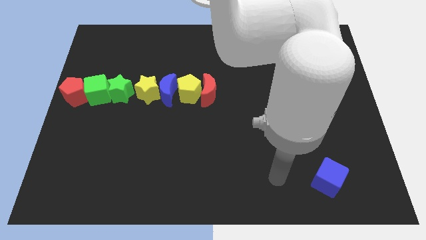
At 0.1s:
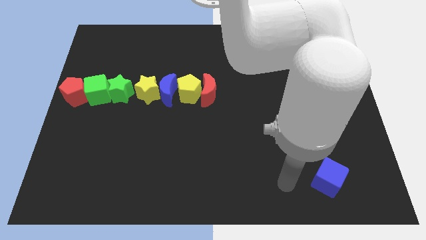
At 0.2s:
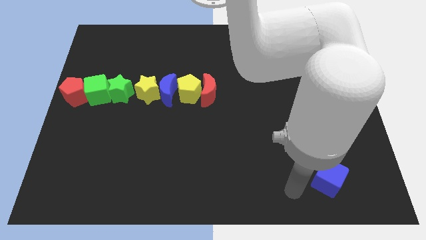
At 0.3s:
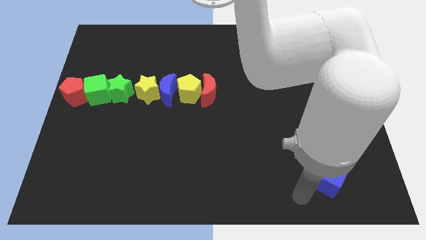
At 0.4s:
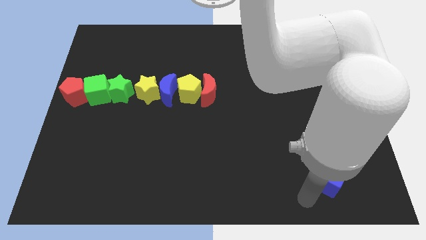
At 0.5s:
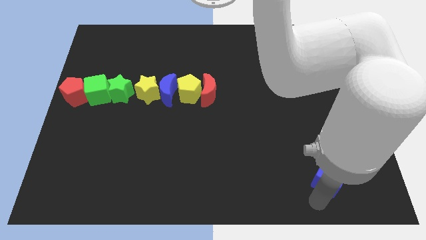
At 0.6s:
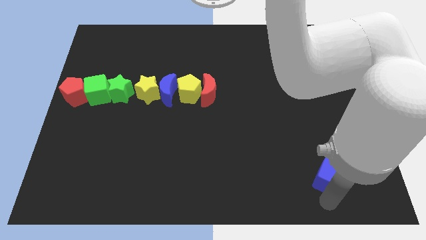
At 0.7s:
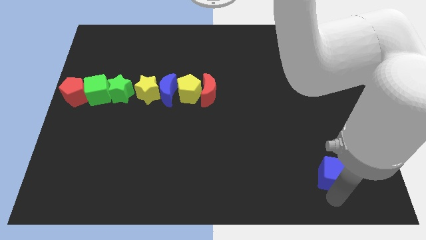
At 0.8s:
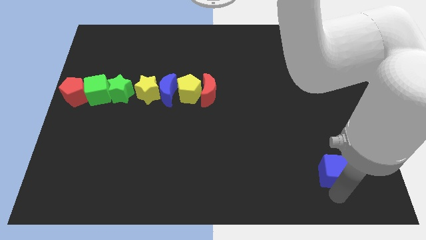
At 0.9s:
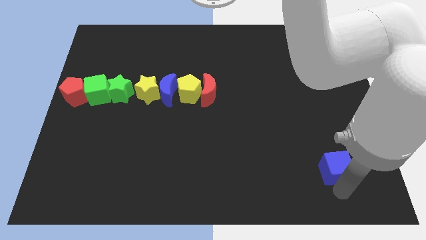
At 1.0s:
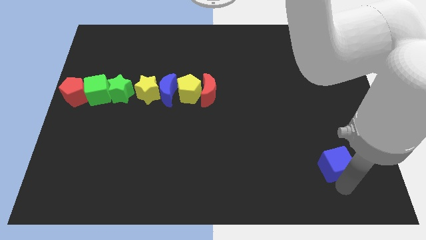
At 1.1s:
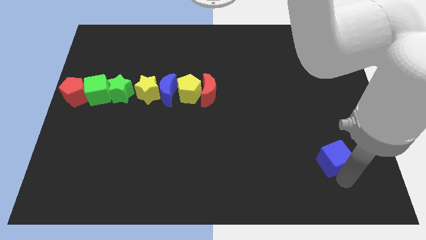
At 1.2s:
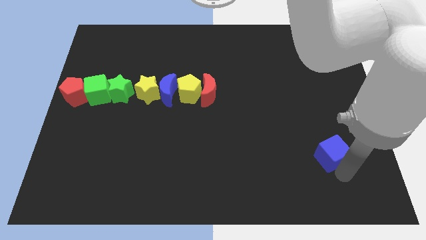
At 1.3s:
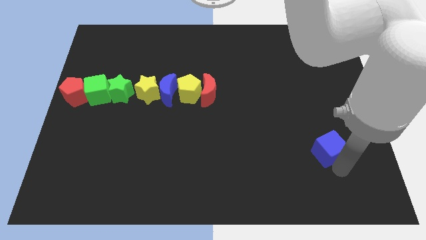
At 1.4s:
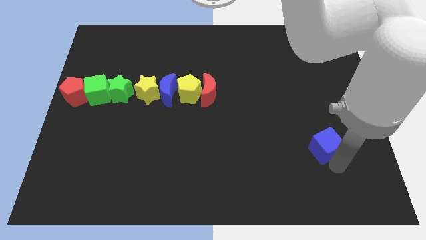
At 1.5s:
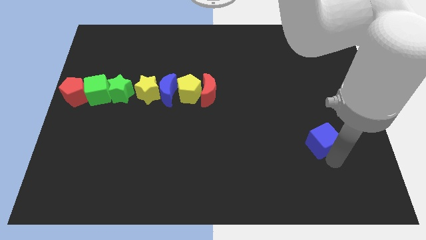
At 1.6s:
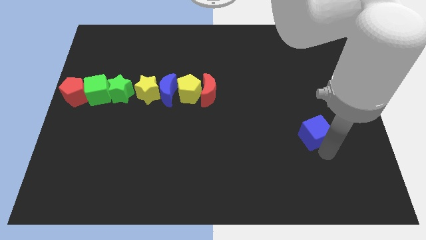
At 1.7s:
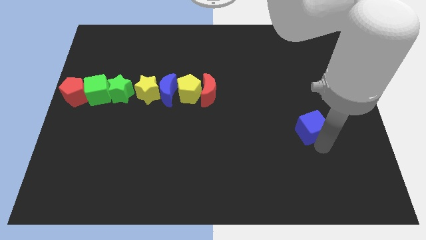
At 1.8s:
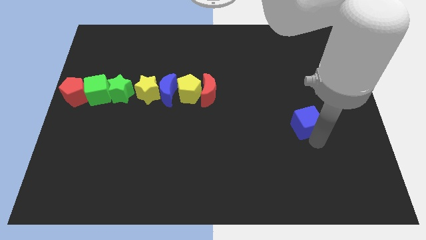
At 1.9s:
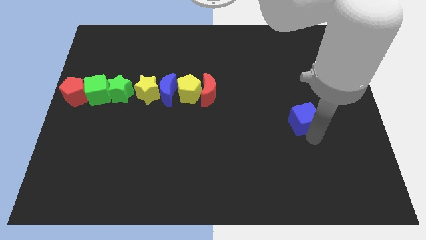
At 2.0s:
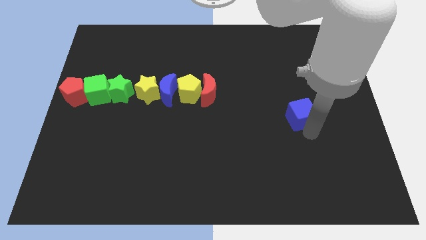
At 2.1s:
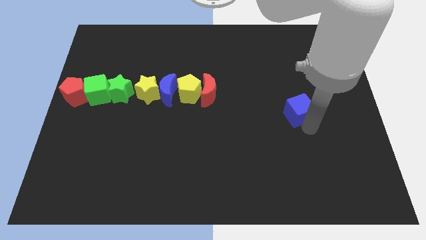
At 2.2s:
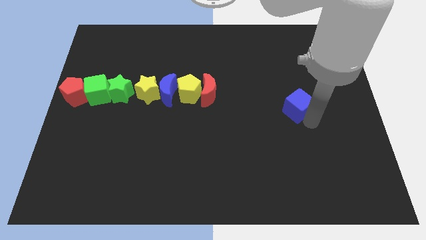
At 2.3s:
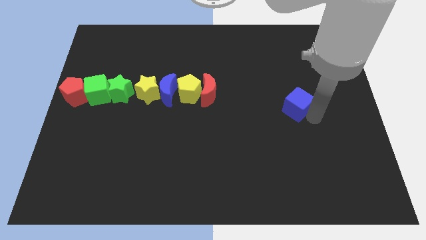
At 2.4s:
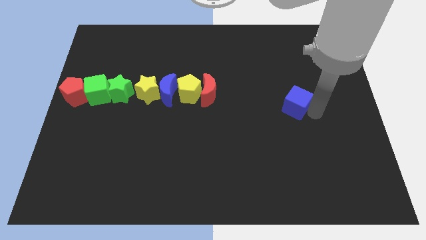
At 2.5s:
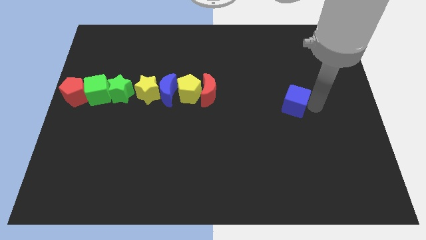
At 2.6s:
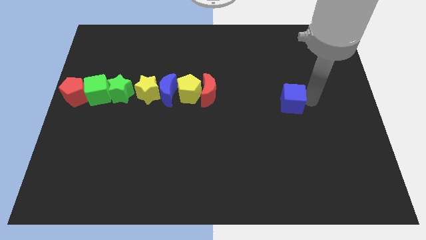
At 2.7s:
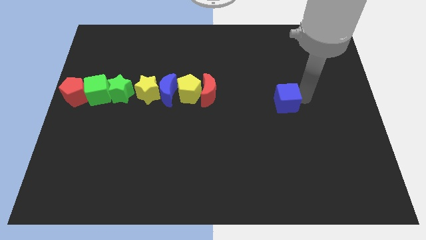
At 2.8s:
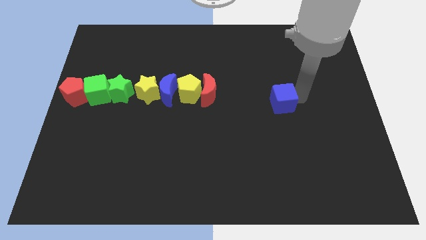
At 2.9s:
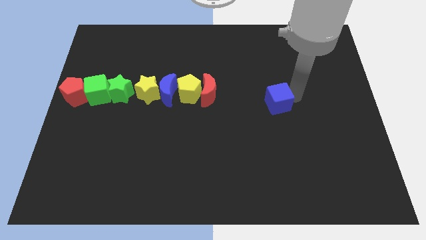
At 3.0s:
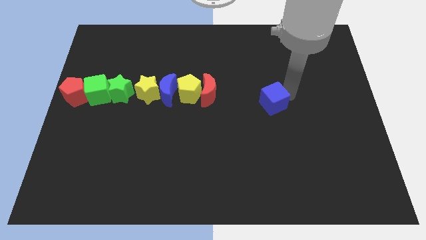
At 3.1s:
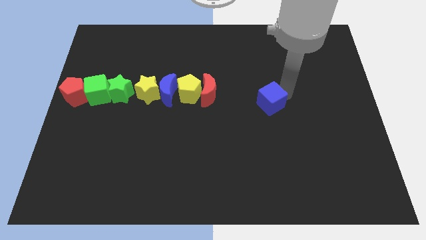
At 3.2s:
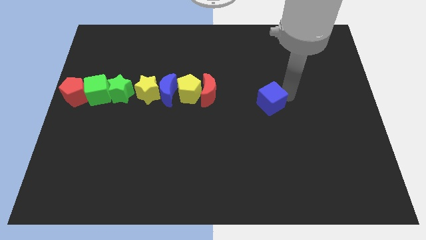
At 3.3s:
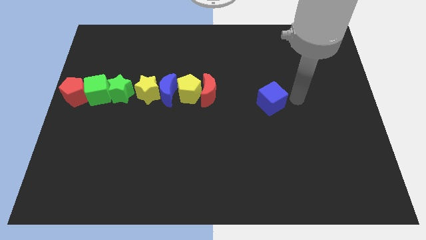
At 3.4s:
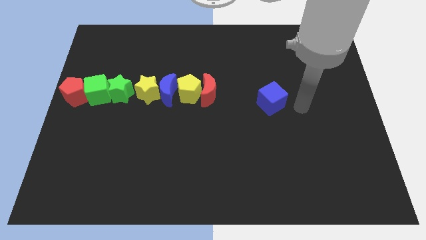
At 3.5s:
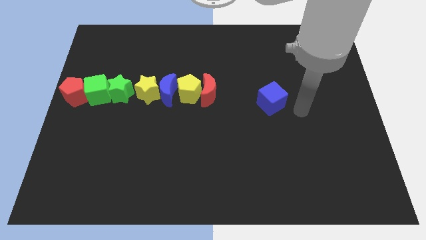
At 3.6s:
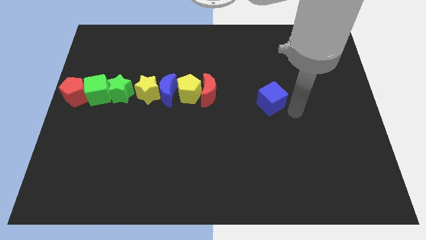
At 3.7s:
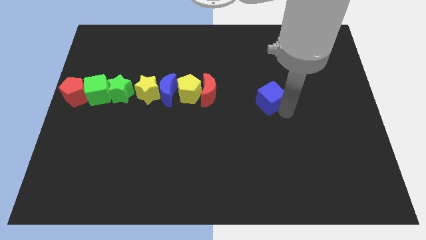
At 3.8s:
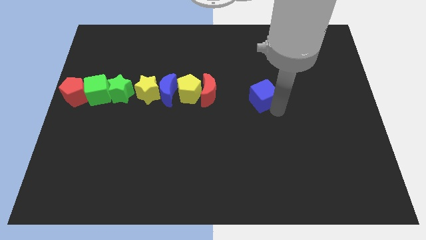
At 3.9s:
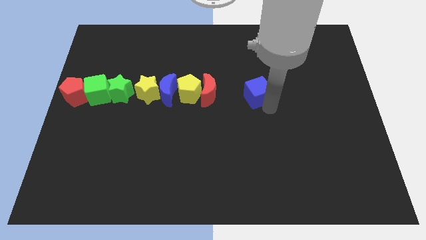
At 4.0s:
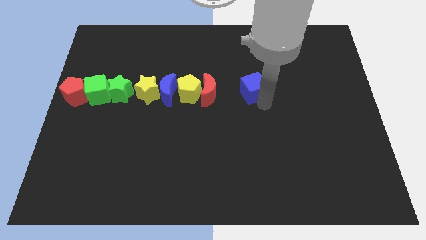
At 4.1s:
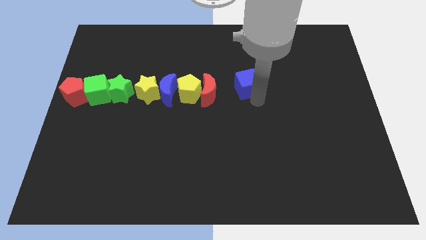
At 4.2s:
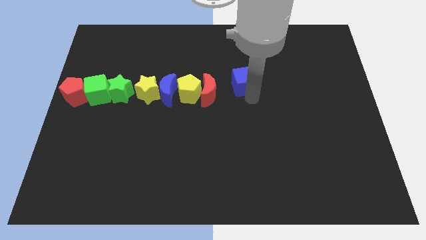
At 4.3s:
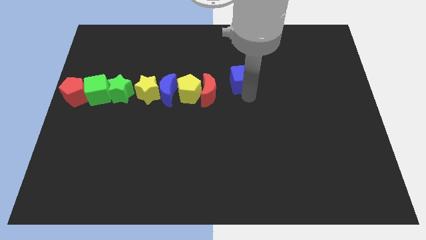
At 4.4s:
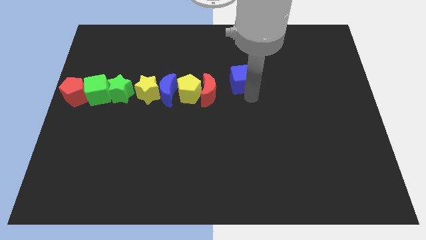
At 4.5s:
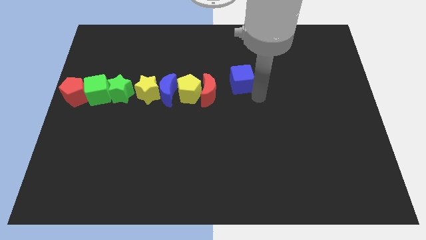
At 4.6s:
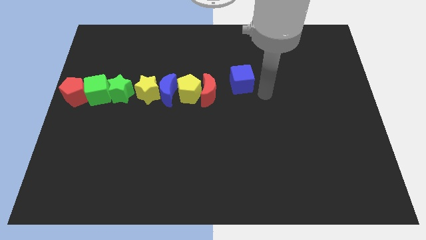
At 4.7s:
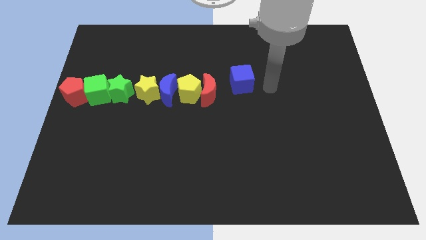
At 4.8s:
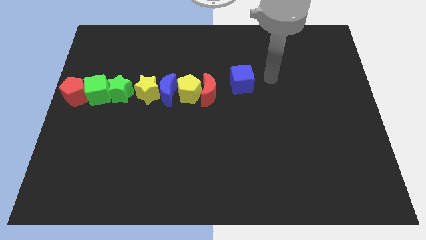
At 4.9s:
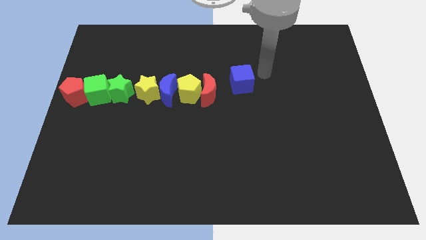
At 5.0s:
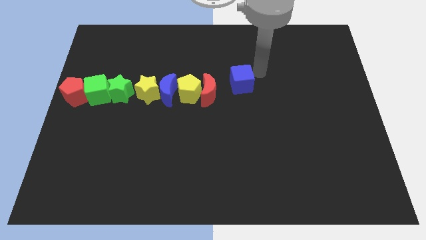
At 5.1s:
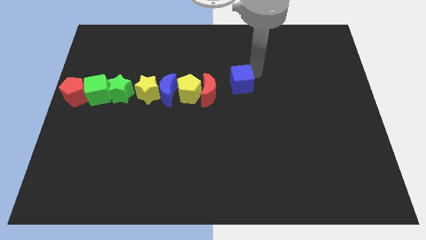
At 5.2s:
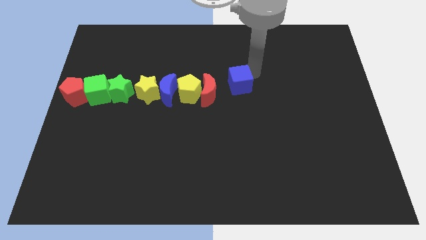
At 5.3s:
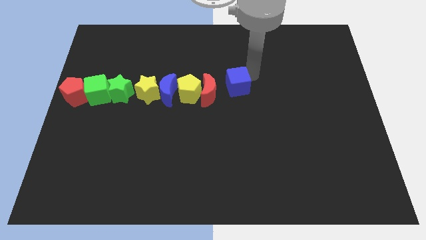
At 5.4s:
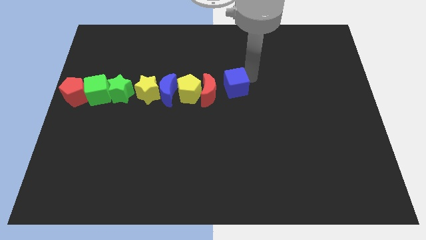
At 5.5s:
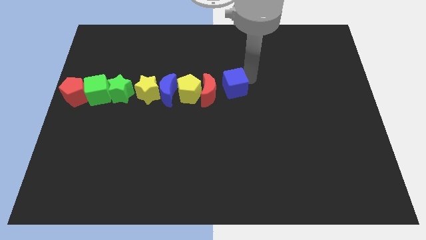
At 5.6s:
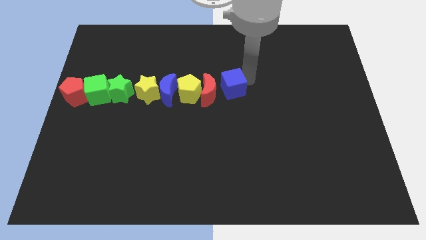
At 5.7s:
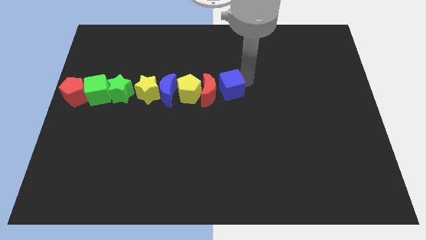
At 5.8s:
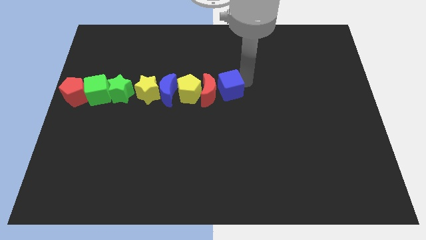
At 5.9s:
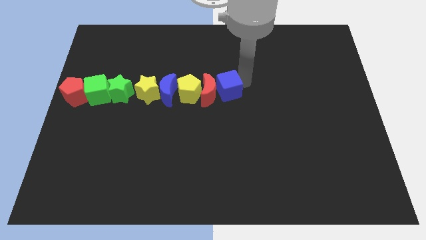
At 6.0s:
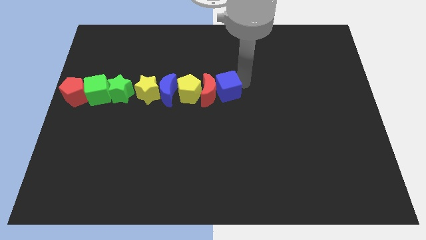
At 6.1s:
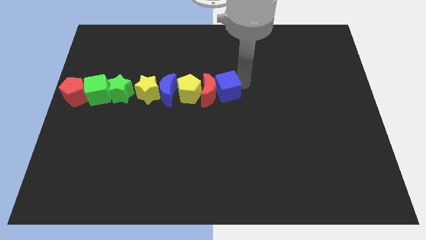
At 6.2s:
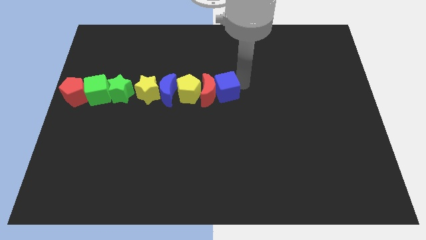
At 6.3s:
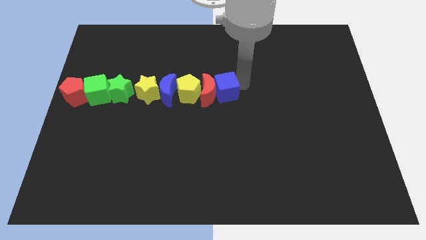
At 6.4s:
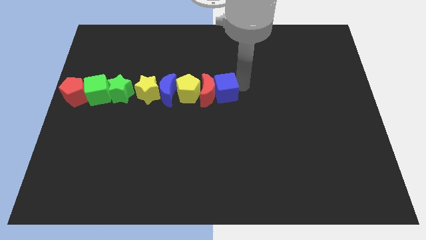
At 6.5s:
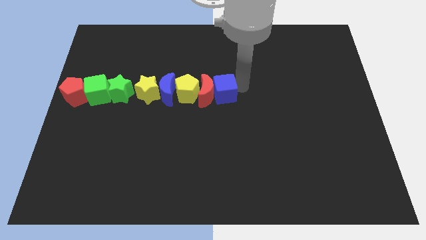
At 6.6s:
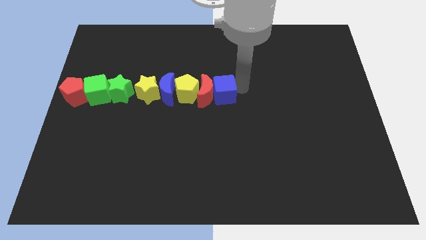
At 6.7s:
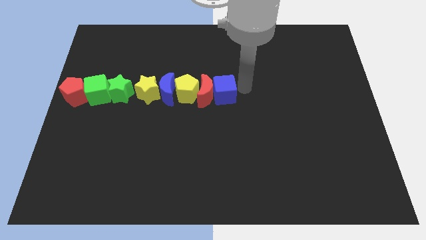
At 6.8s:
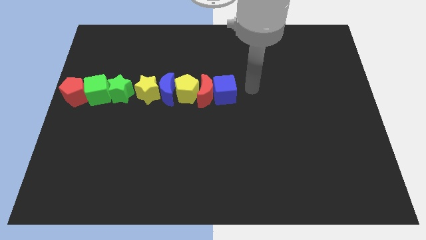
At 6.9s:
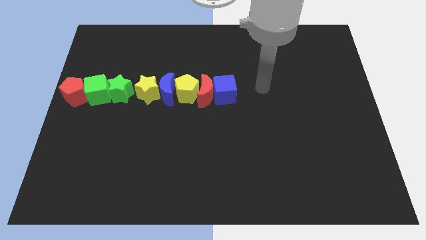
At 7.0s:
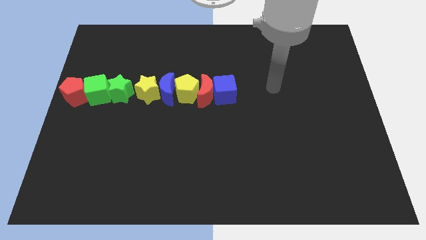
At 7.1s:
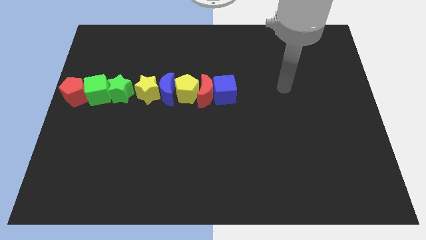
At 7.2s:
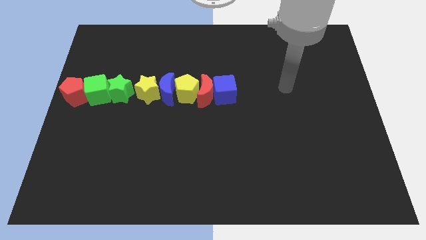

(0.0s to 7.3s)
move the blue cube to the right side of the red crescent

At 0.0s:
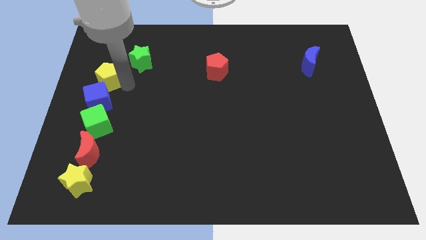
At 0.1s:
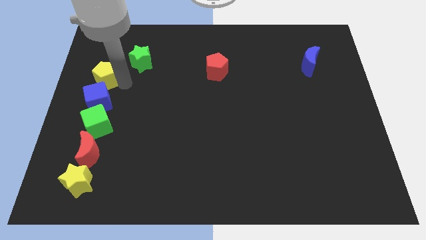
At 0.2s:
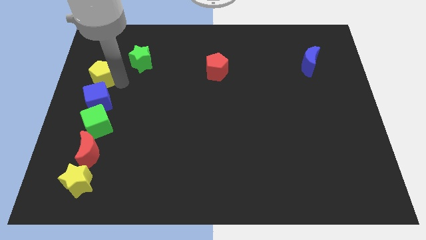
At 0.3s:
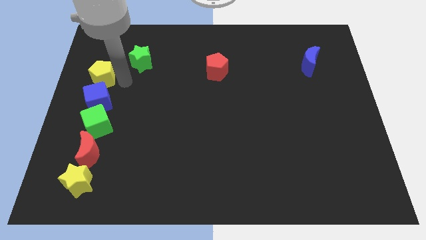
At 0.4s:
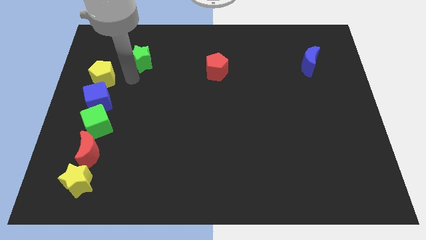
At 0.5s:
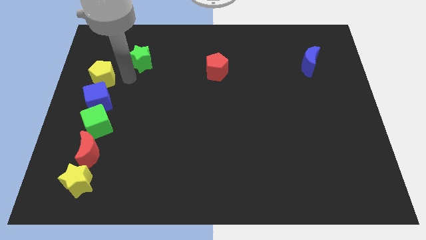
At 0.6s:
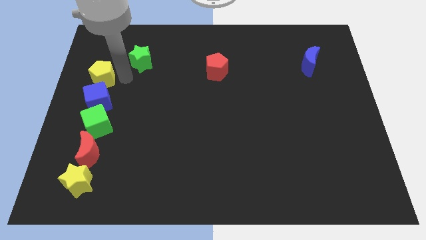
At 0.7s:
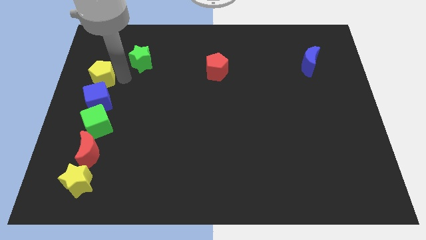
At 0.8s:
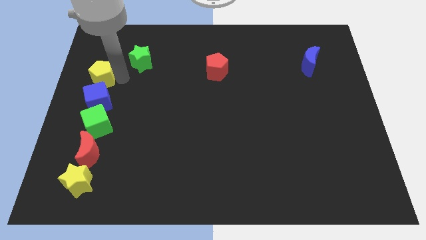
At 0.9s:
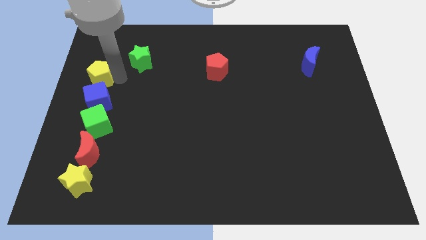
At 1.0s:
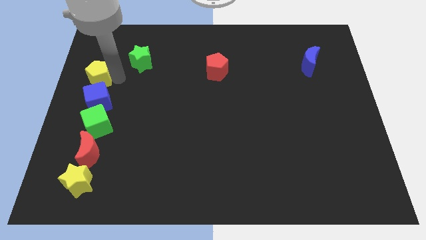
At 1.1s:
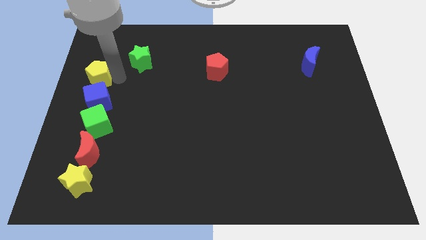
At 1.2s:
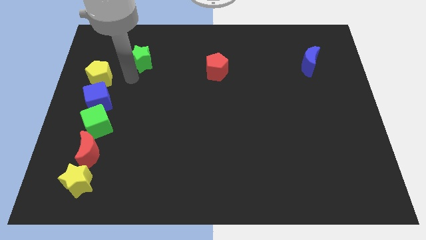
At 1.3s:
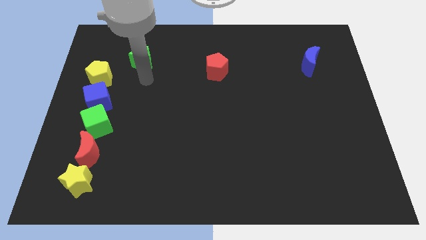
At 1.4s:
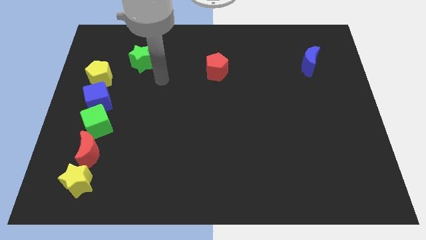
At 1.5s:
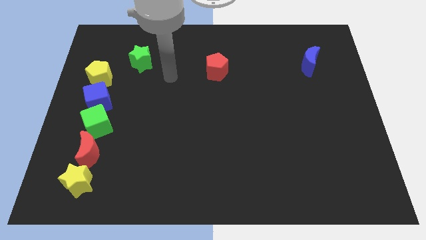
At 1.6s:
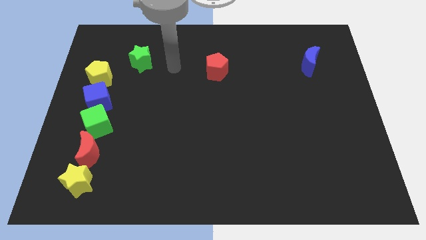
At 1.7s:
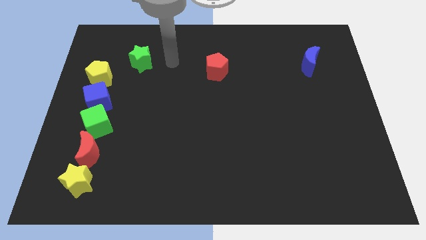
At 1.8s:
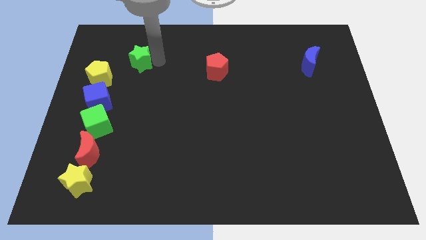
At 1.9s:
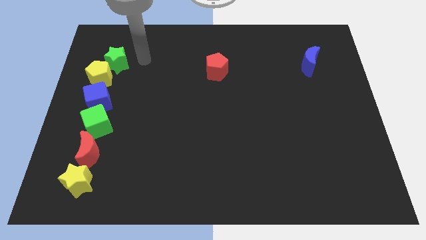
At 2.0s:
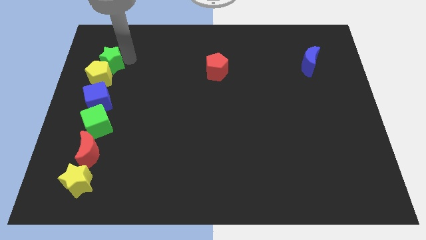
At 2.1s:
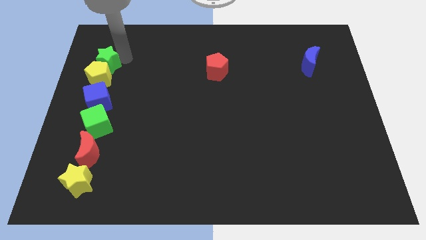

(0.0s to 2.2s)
drag the green star towards the left top corner
